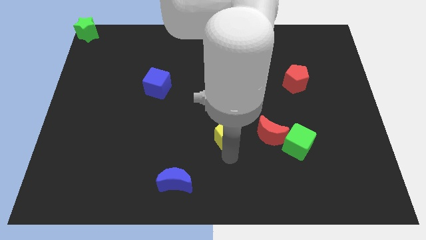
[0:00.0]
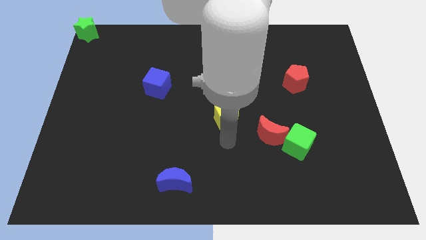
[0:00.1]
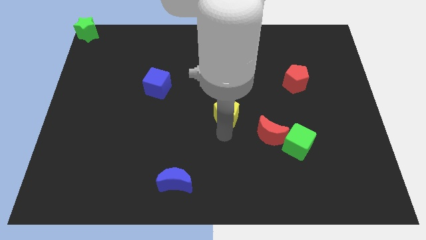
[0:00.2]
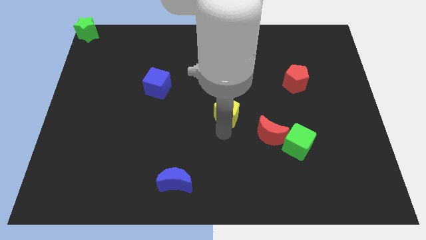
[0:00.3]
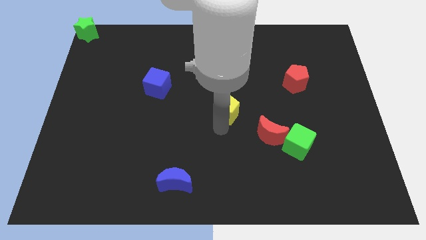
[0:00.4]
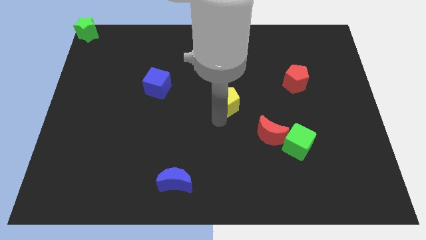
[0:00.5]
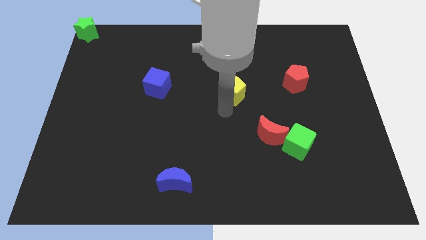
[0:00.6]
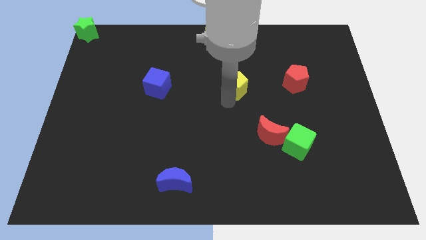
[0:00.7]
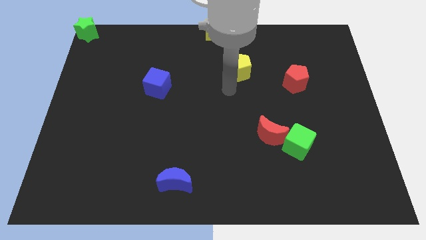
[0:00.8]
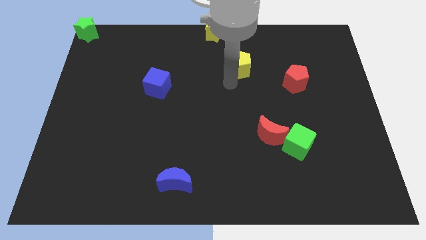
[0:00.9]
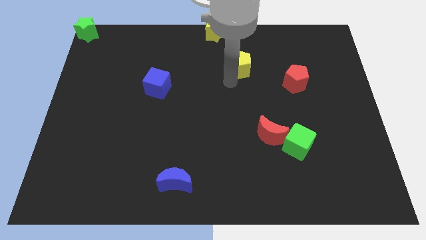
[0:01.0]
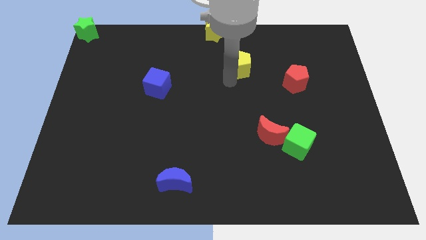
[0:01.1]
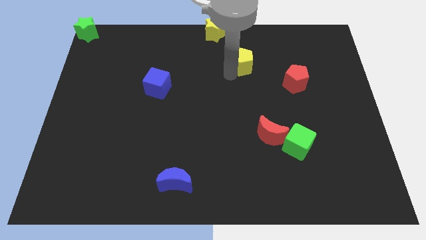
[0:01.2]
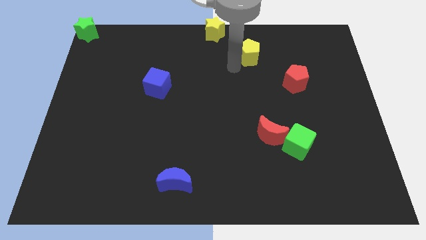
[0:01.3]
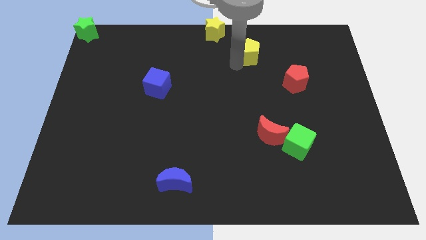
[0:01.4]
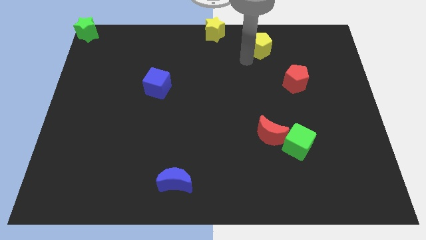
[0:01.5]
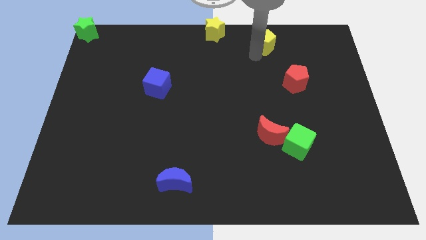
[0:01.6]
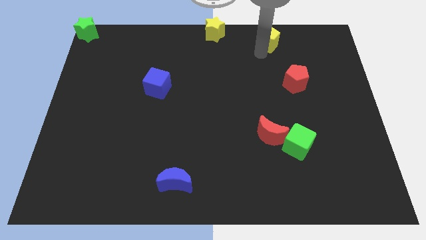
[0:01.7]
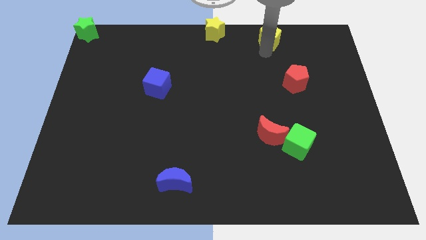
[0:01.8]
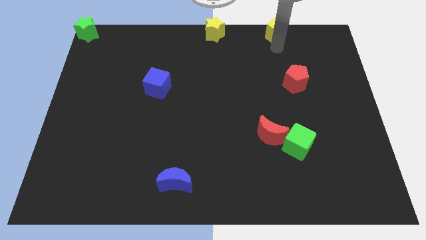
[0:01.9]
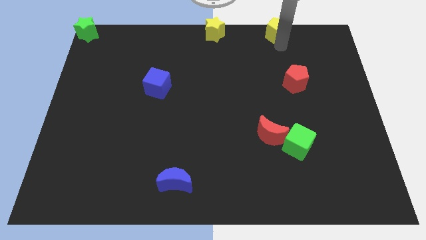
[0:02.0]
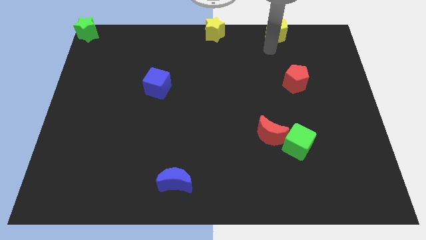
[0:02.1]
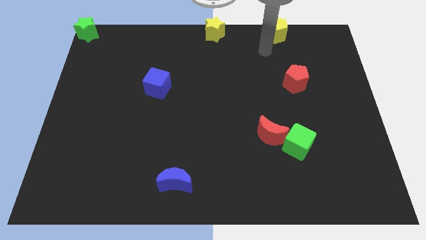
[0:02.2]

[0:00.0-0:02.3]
place the yellow pentagon to the right of yellow star

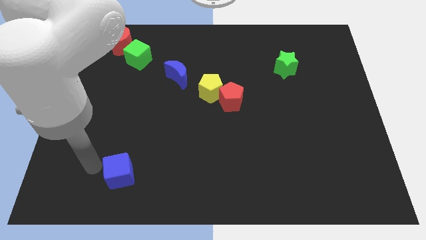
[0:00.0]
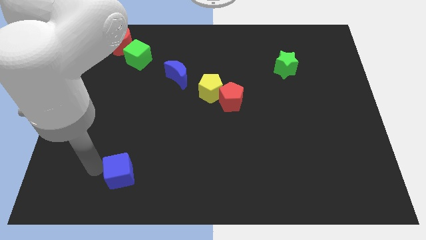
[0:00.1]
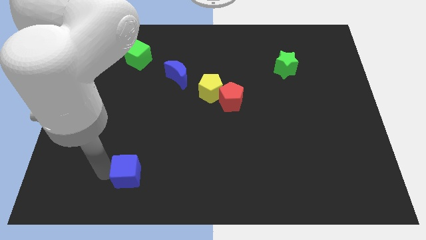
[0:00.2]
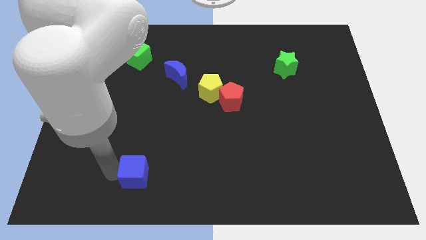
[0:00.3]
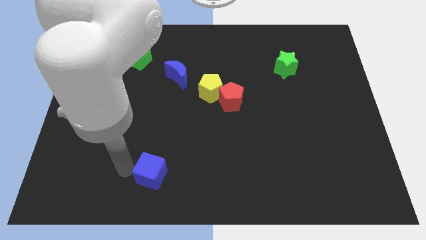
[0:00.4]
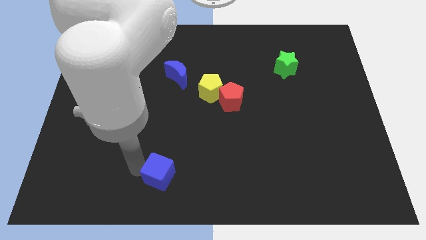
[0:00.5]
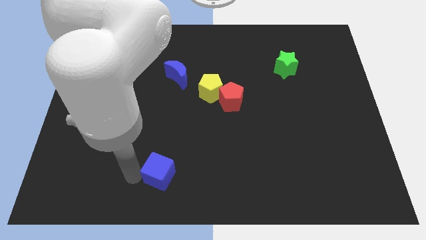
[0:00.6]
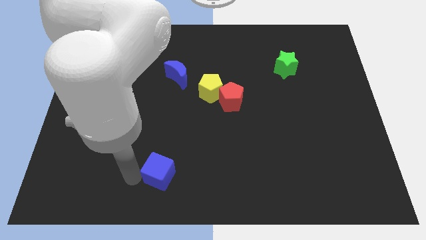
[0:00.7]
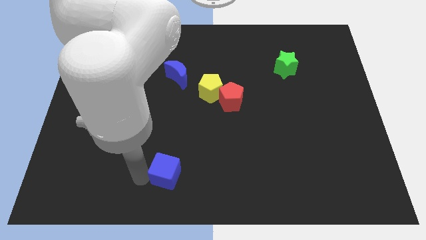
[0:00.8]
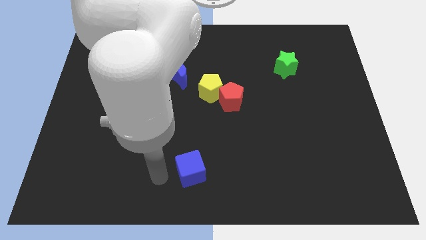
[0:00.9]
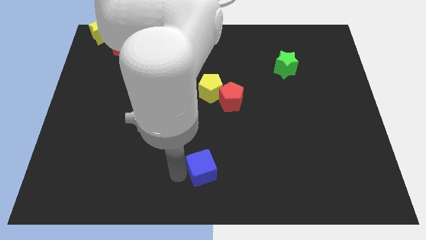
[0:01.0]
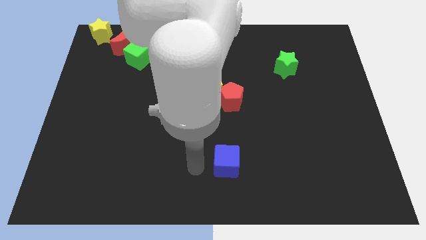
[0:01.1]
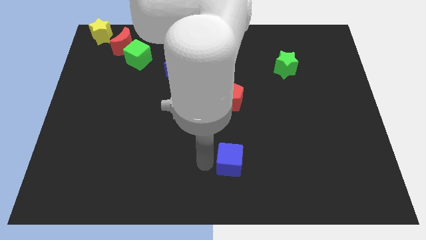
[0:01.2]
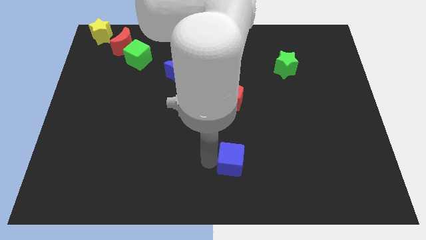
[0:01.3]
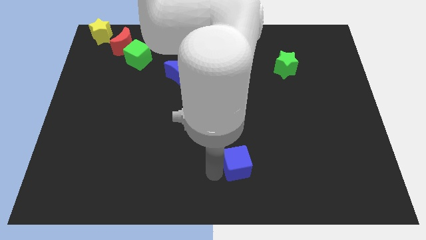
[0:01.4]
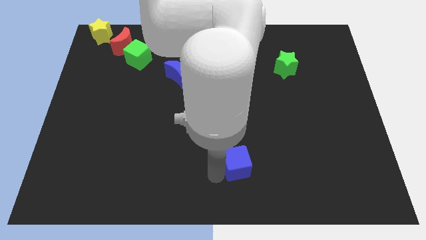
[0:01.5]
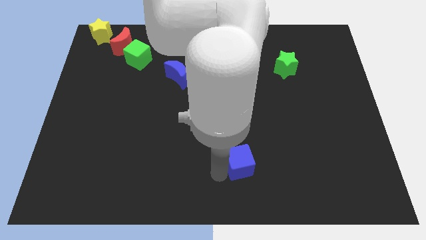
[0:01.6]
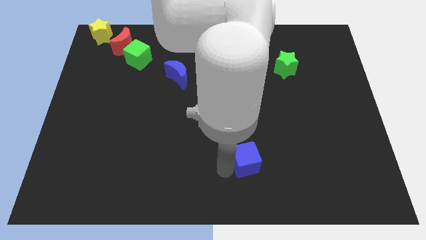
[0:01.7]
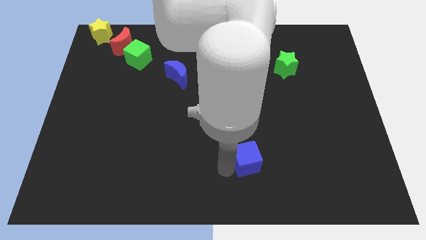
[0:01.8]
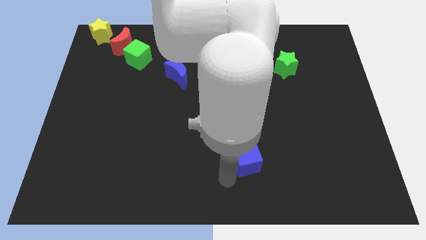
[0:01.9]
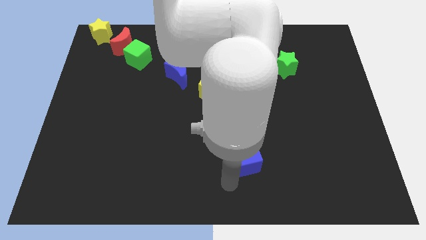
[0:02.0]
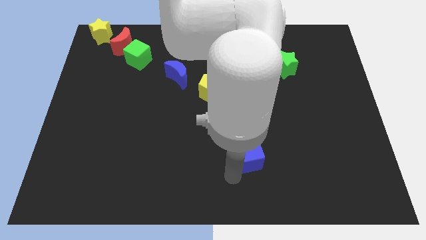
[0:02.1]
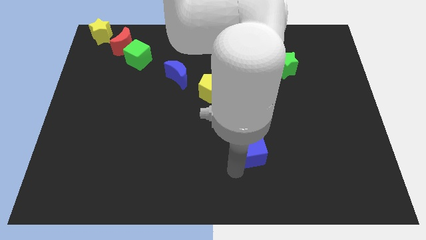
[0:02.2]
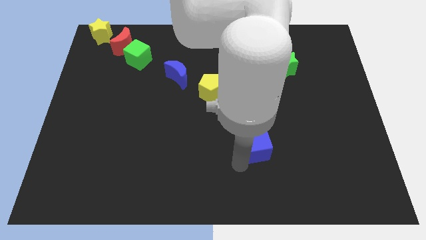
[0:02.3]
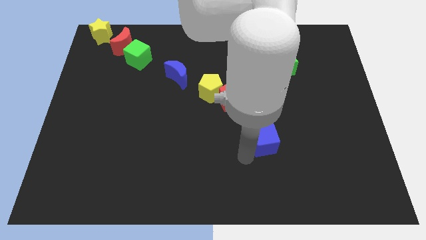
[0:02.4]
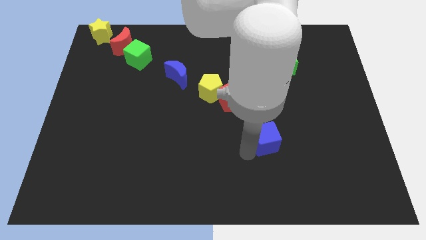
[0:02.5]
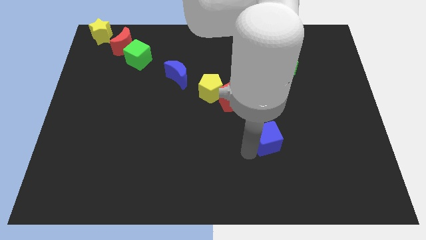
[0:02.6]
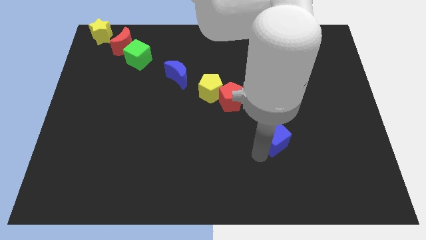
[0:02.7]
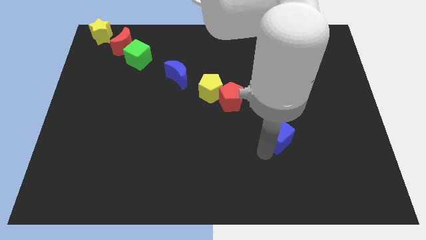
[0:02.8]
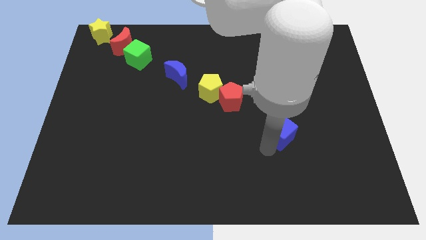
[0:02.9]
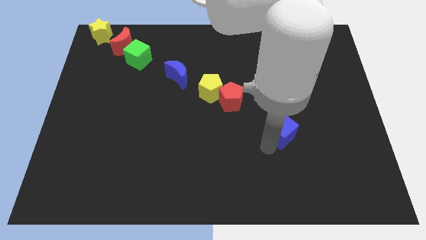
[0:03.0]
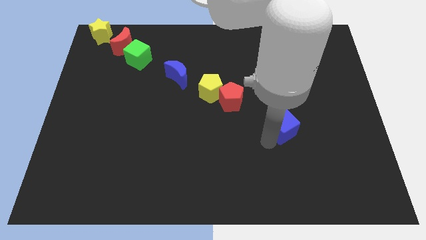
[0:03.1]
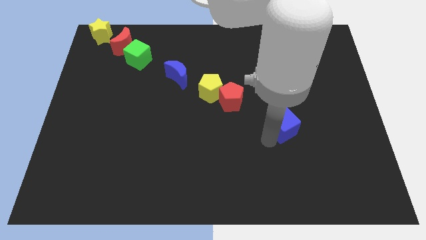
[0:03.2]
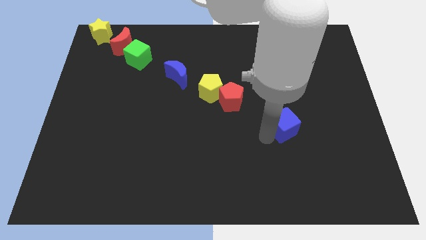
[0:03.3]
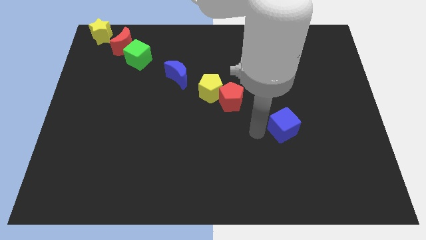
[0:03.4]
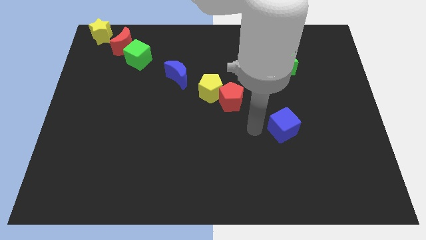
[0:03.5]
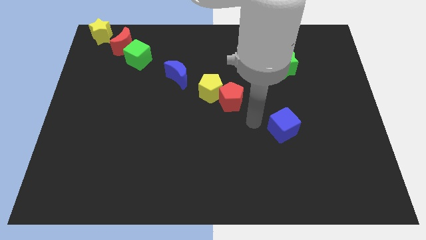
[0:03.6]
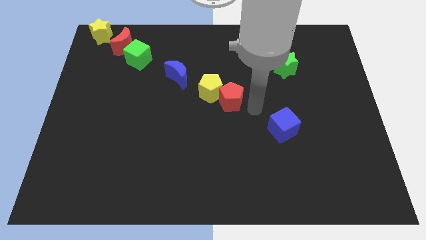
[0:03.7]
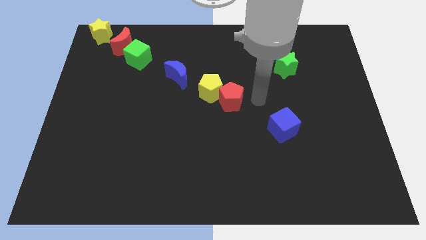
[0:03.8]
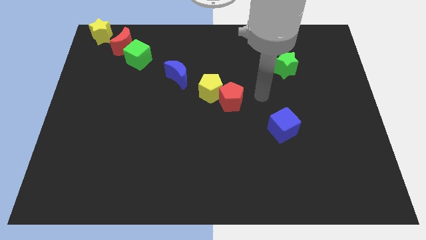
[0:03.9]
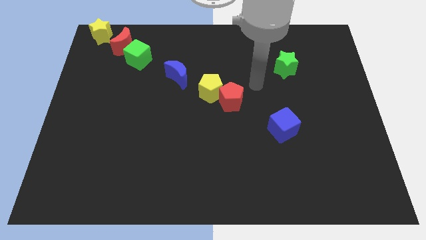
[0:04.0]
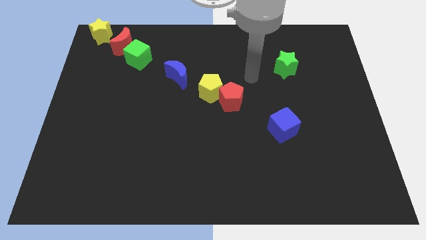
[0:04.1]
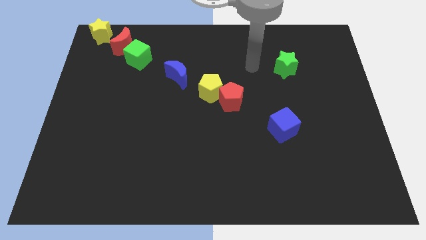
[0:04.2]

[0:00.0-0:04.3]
place the blue cube diagonal to the red pentagon

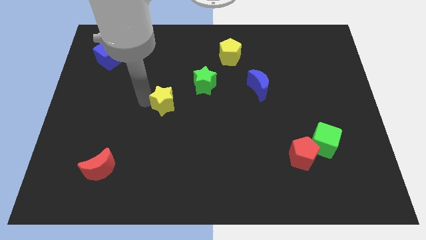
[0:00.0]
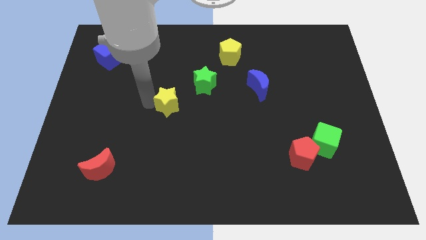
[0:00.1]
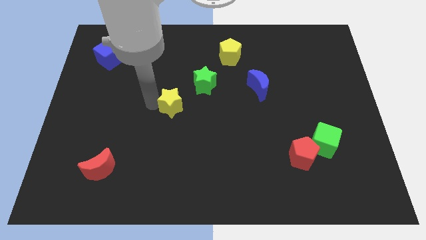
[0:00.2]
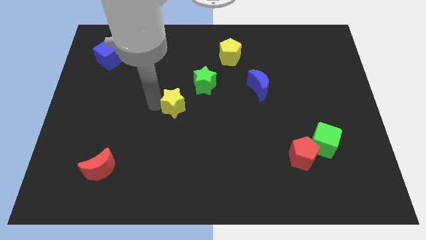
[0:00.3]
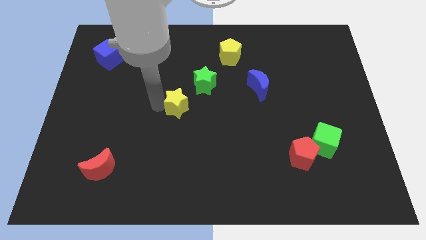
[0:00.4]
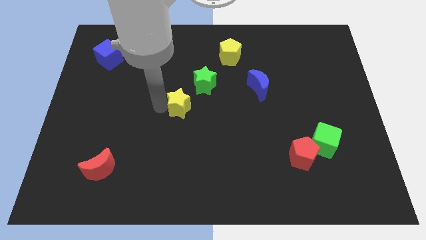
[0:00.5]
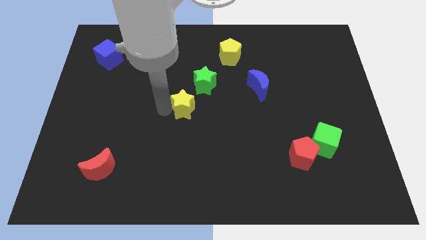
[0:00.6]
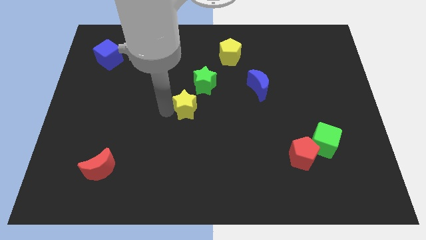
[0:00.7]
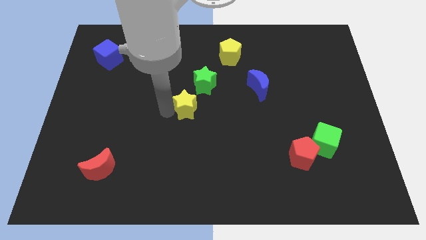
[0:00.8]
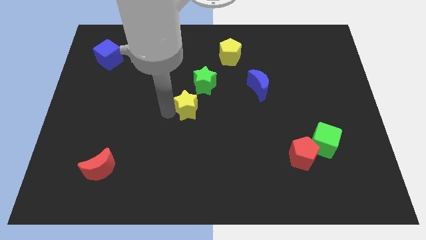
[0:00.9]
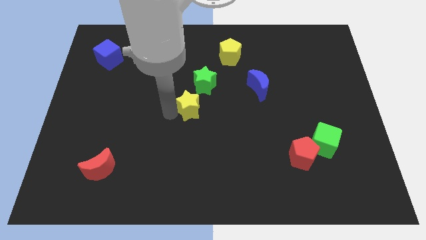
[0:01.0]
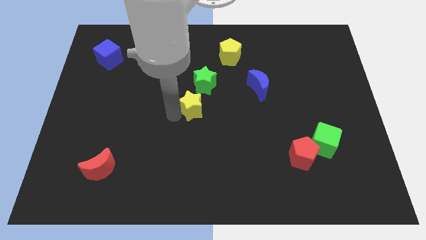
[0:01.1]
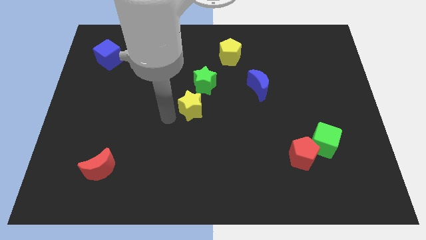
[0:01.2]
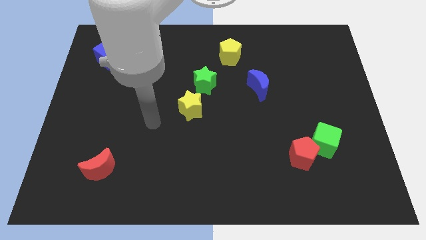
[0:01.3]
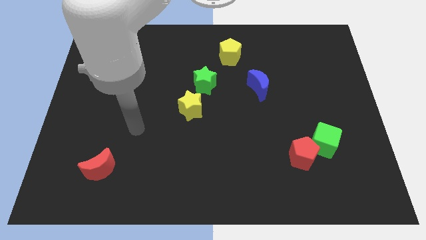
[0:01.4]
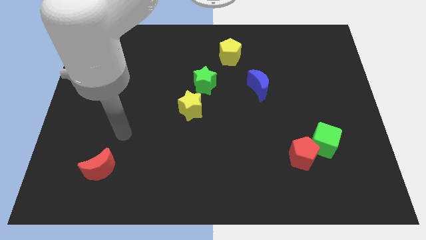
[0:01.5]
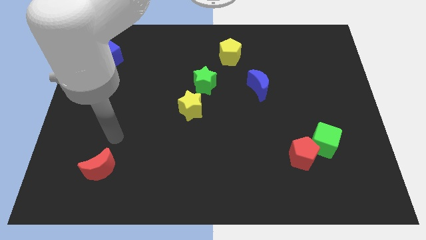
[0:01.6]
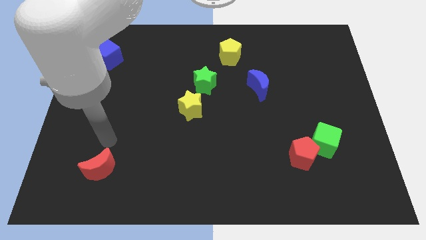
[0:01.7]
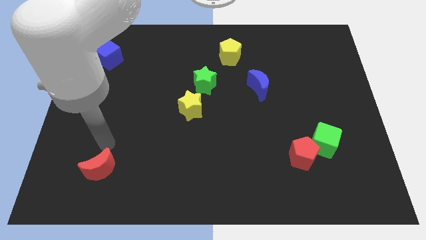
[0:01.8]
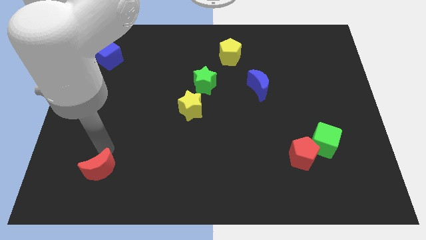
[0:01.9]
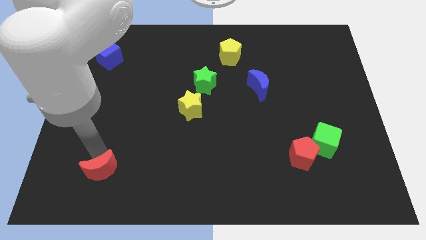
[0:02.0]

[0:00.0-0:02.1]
move the yellow star slightly to the bottom of green star

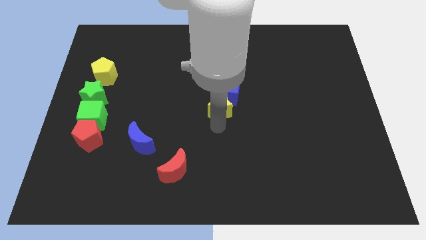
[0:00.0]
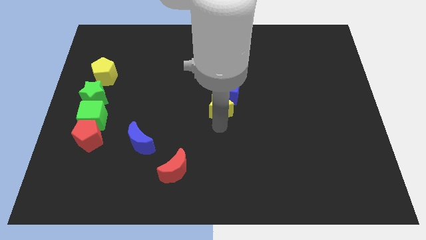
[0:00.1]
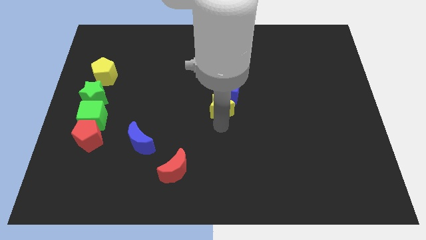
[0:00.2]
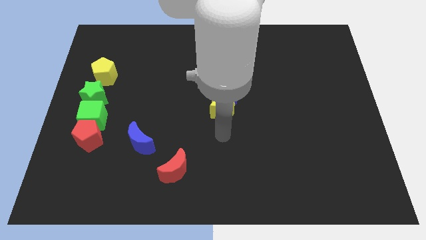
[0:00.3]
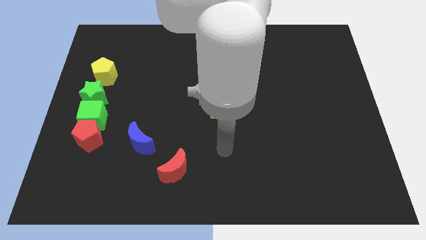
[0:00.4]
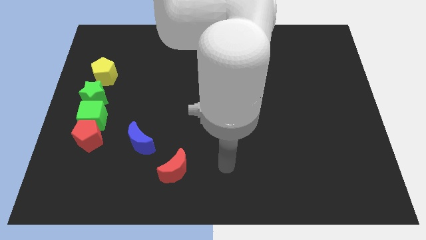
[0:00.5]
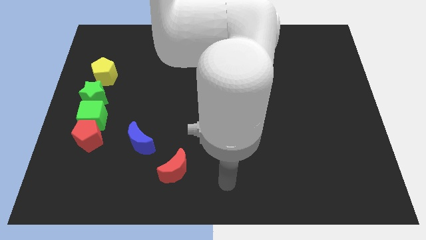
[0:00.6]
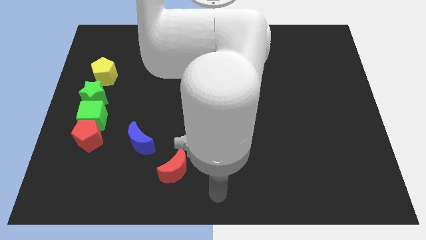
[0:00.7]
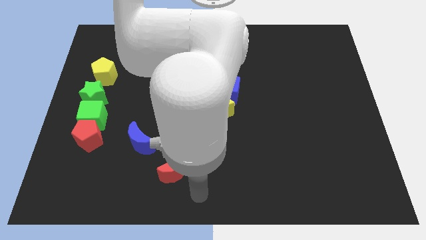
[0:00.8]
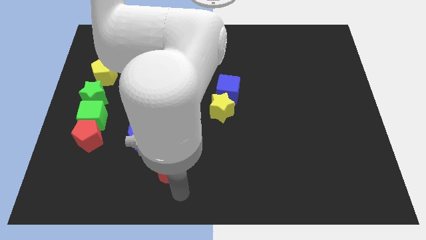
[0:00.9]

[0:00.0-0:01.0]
place your arm to the bottom of the red moon
